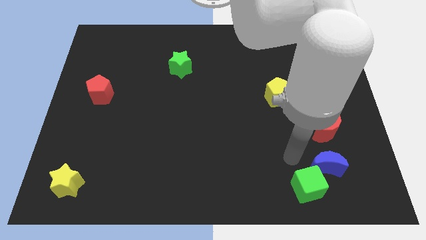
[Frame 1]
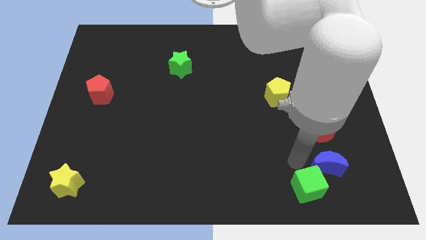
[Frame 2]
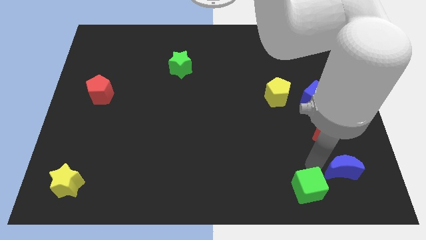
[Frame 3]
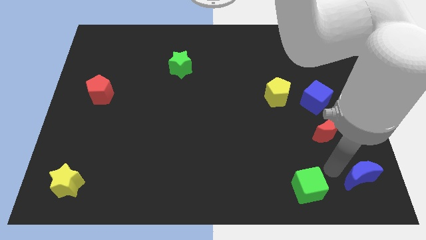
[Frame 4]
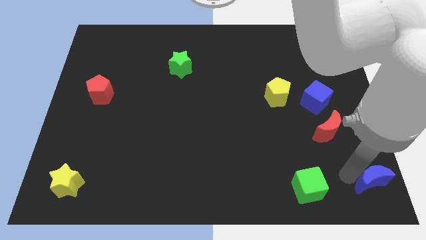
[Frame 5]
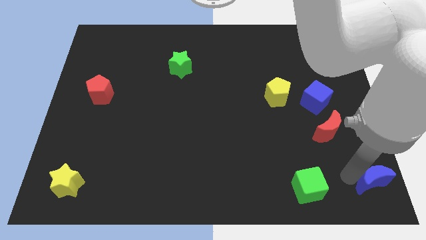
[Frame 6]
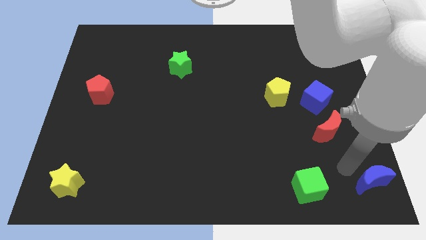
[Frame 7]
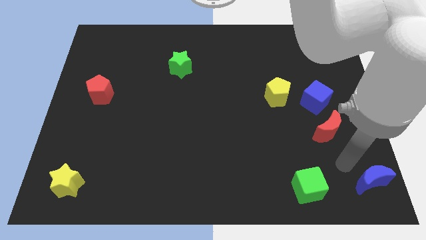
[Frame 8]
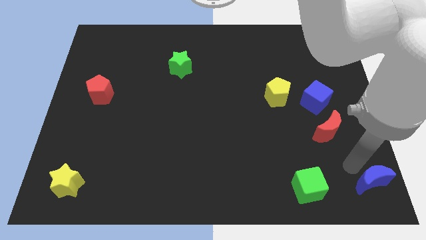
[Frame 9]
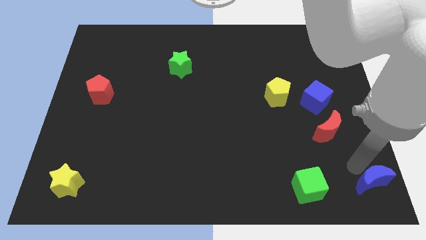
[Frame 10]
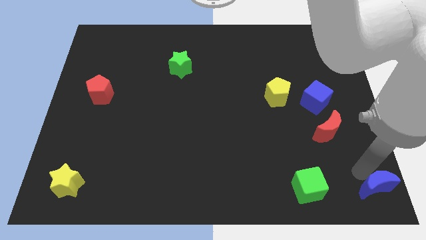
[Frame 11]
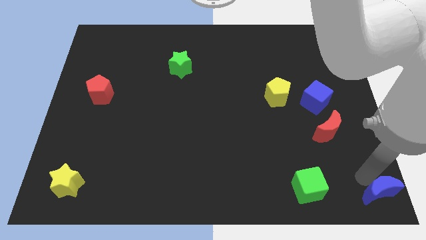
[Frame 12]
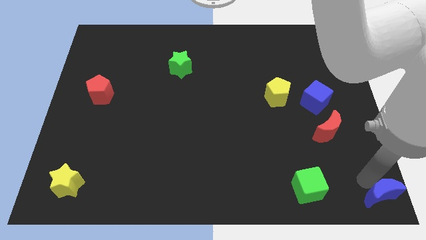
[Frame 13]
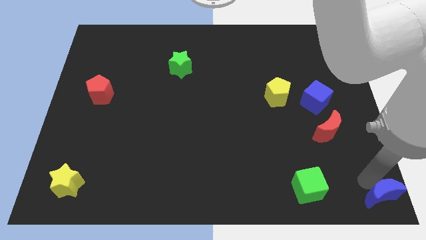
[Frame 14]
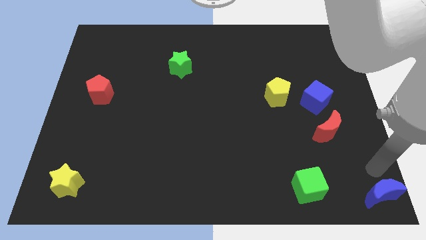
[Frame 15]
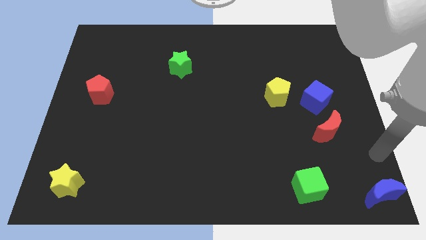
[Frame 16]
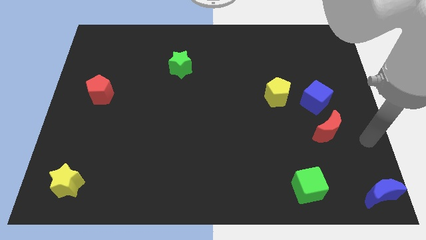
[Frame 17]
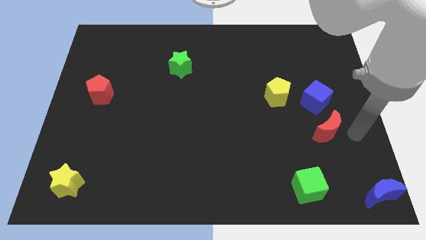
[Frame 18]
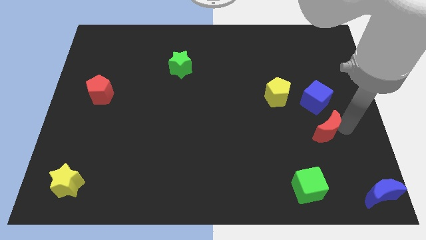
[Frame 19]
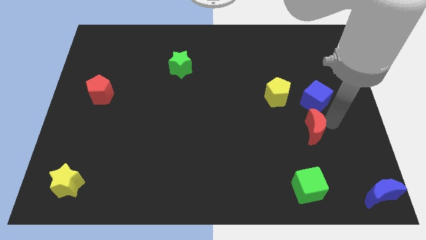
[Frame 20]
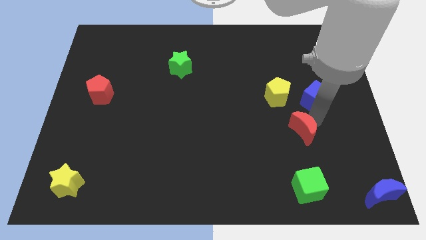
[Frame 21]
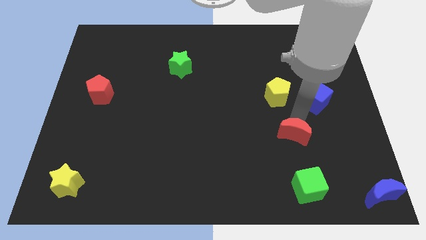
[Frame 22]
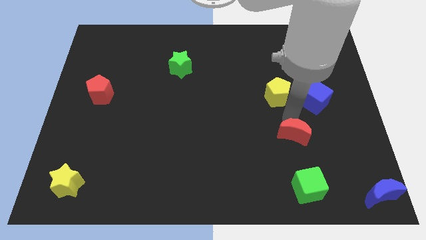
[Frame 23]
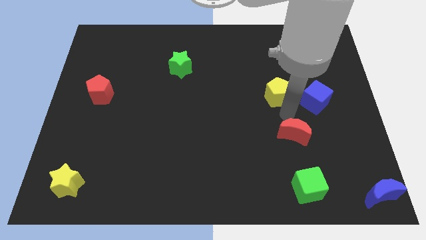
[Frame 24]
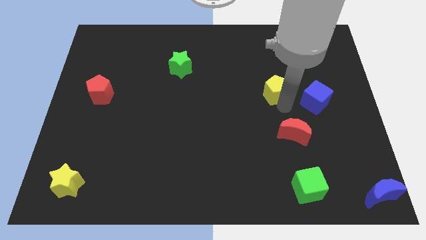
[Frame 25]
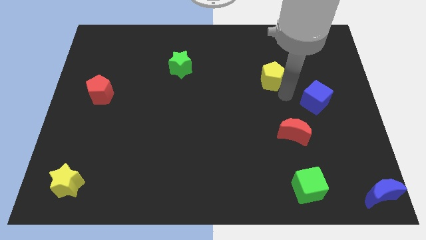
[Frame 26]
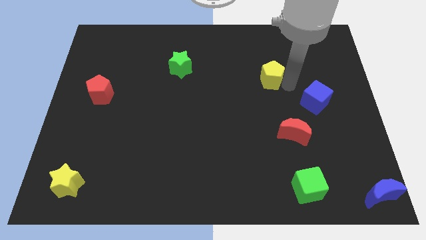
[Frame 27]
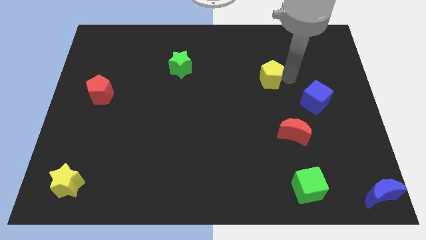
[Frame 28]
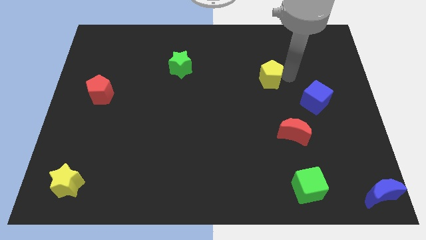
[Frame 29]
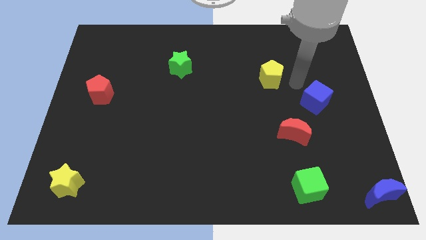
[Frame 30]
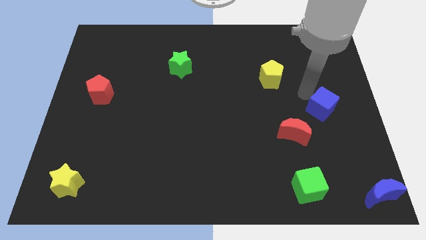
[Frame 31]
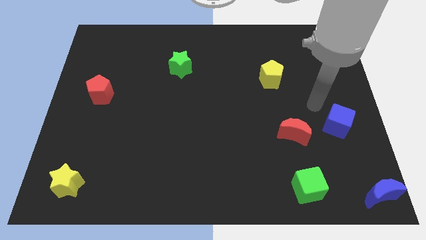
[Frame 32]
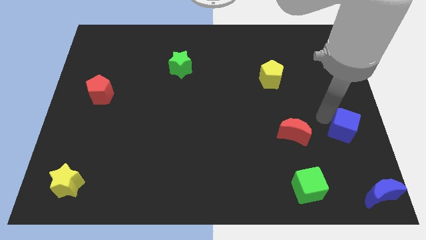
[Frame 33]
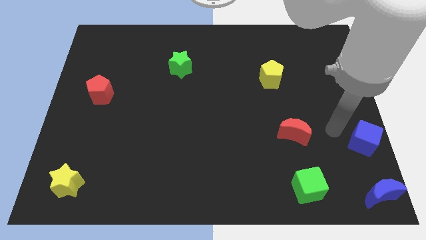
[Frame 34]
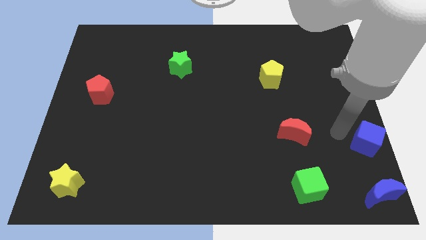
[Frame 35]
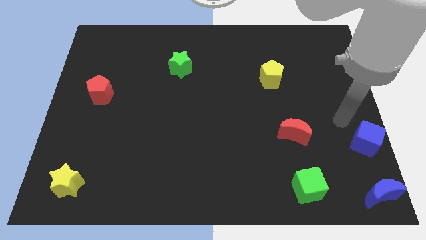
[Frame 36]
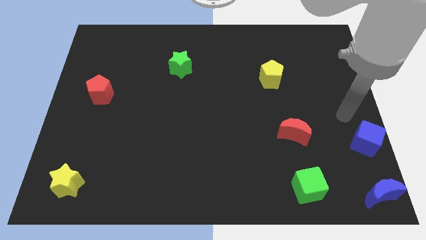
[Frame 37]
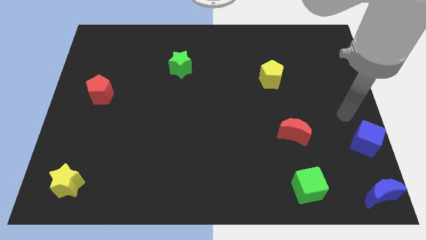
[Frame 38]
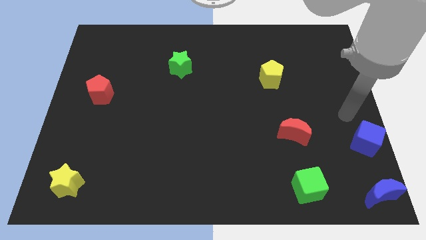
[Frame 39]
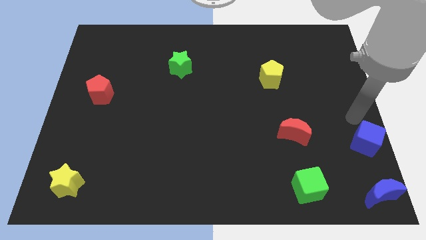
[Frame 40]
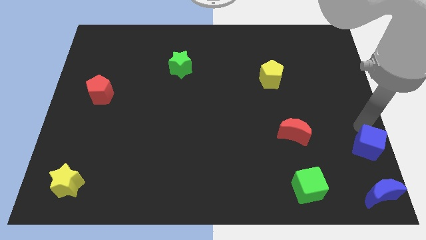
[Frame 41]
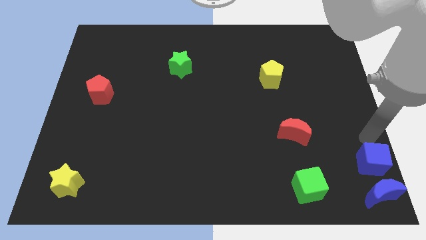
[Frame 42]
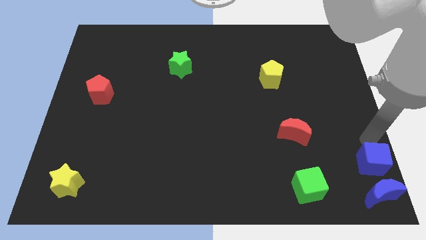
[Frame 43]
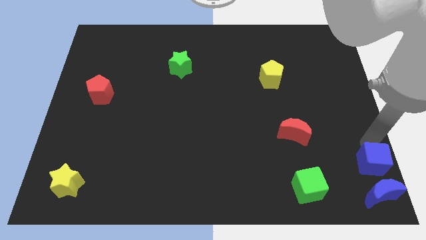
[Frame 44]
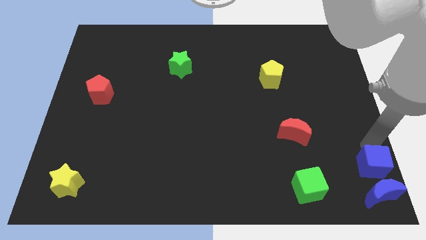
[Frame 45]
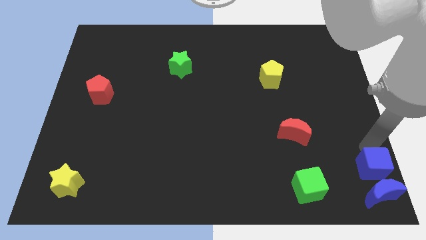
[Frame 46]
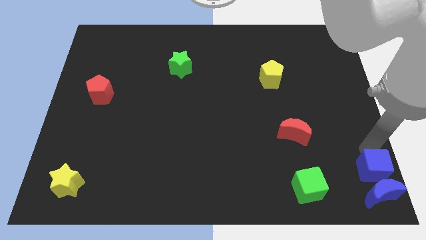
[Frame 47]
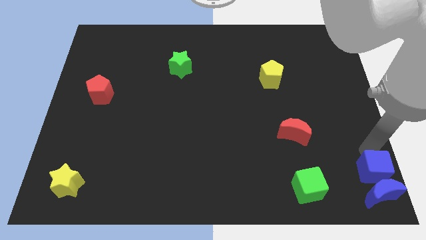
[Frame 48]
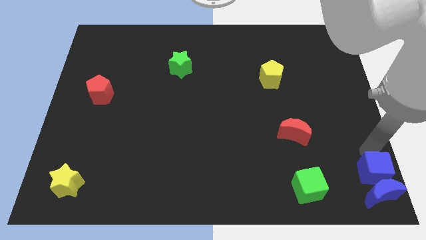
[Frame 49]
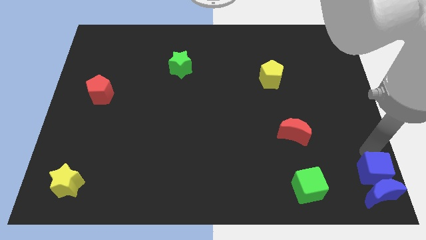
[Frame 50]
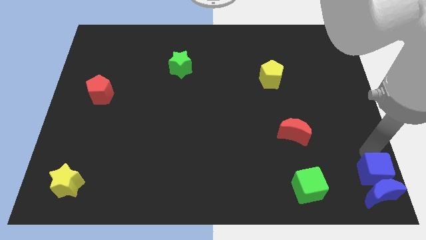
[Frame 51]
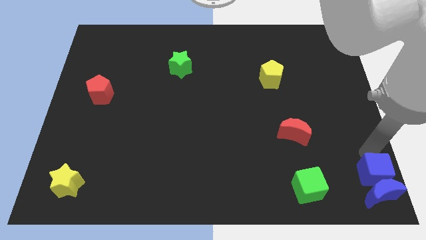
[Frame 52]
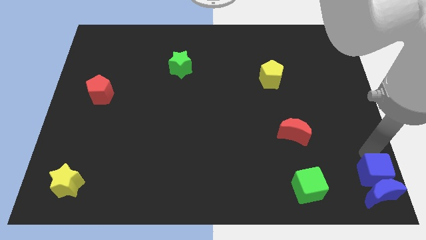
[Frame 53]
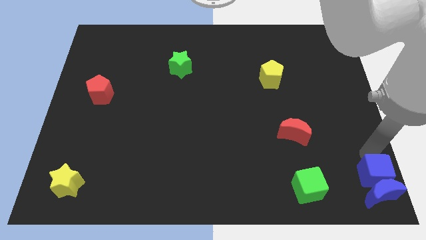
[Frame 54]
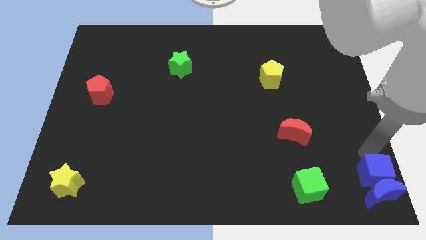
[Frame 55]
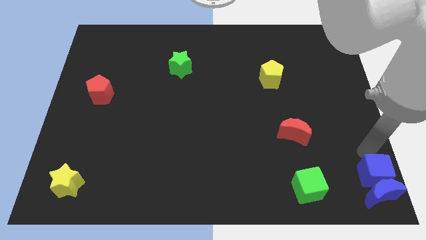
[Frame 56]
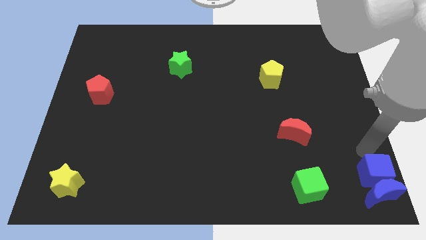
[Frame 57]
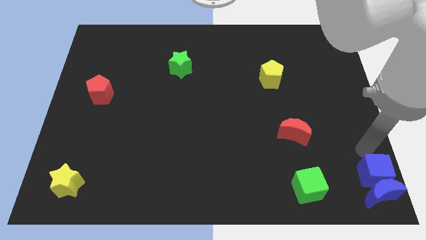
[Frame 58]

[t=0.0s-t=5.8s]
move the blue cube into the blue crescent

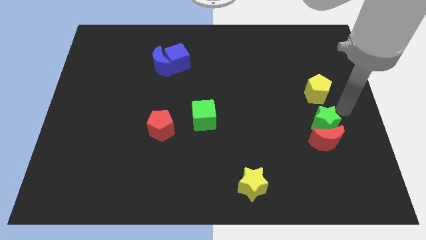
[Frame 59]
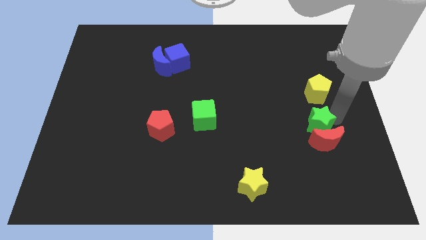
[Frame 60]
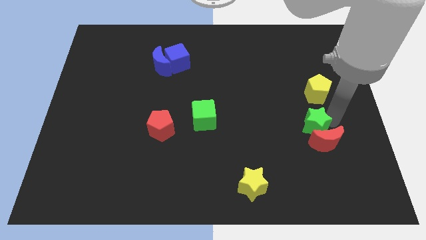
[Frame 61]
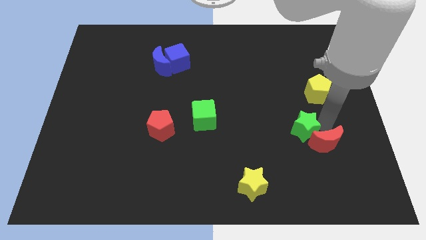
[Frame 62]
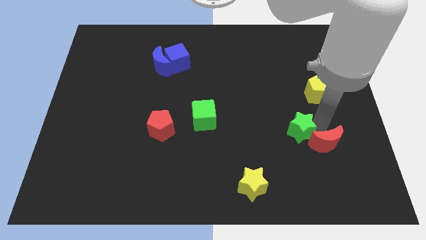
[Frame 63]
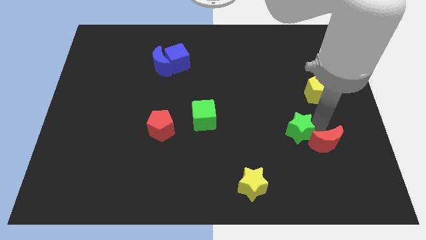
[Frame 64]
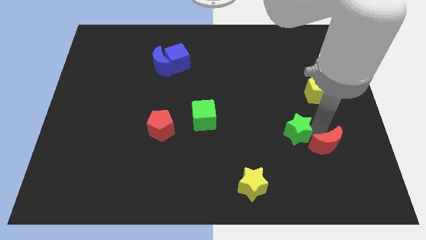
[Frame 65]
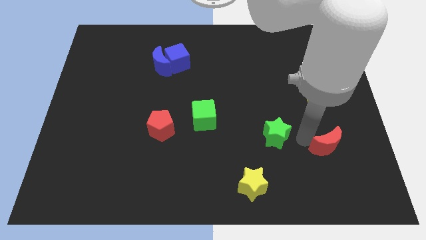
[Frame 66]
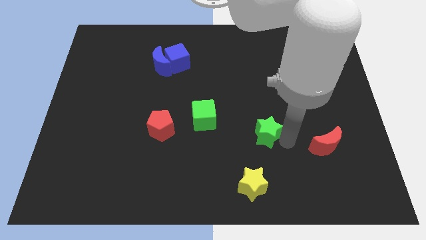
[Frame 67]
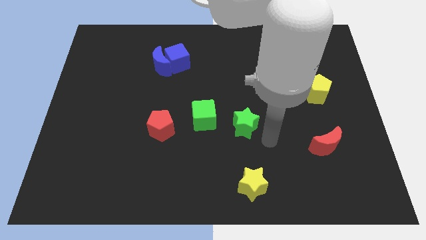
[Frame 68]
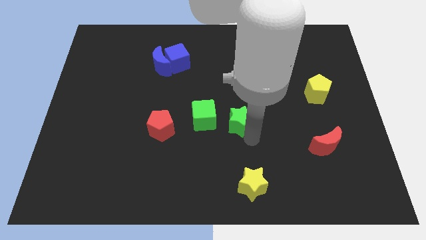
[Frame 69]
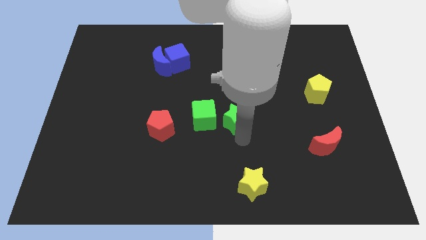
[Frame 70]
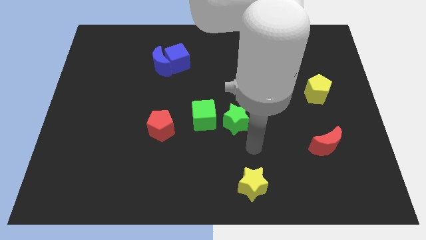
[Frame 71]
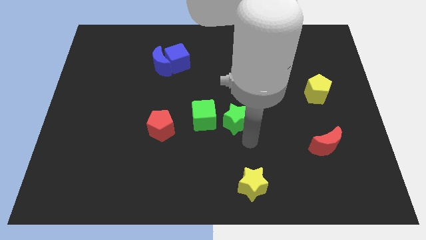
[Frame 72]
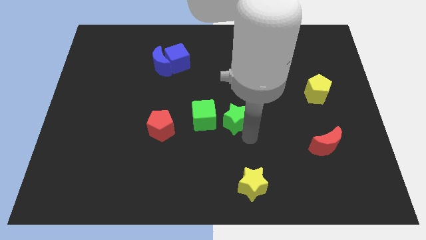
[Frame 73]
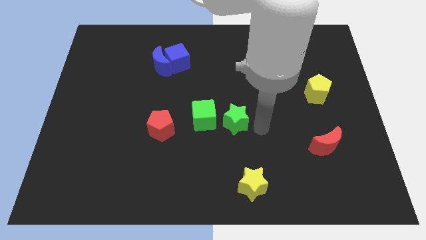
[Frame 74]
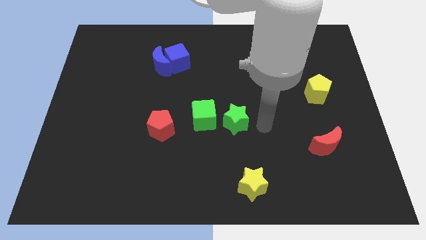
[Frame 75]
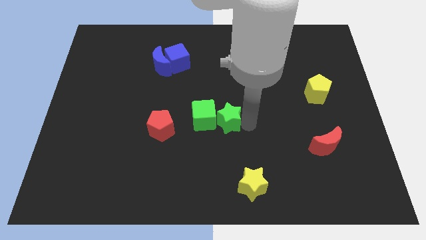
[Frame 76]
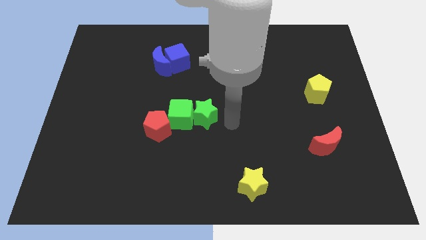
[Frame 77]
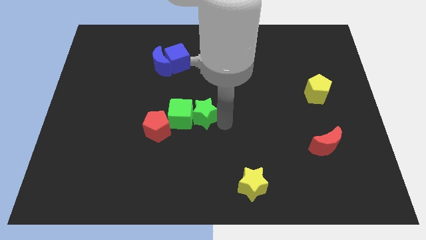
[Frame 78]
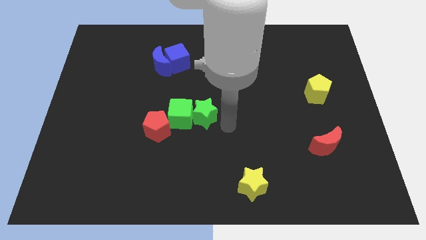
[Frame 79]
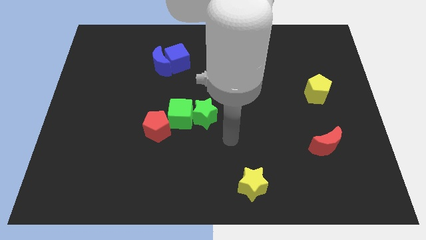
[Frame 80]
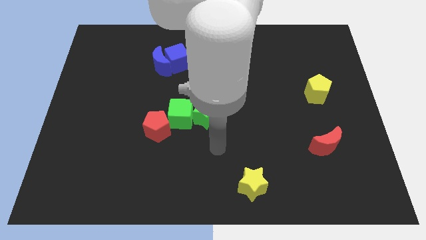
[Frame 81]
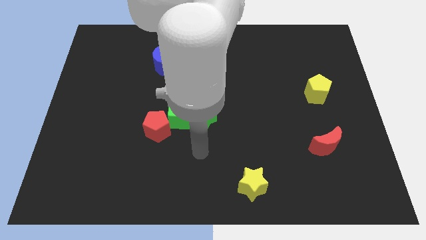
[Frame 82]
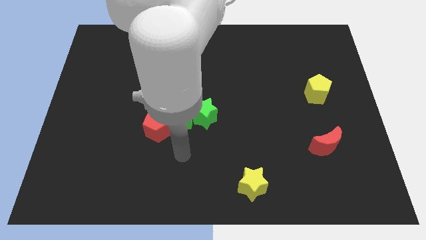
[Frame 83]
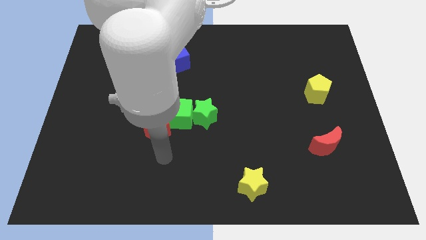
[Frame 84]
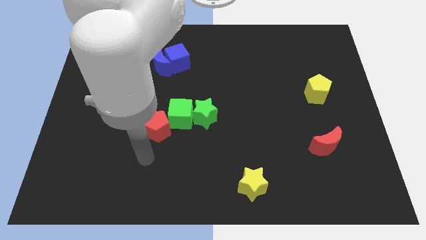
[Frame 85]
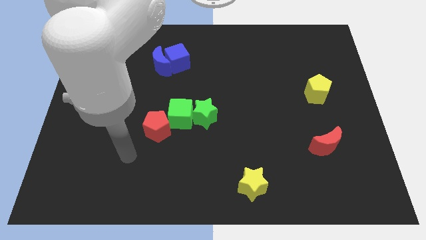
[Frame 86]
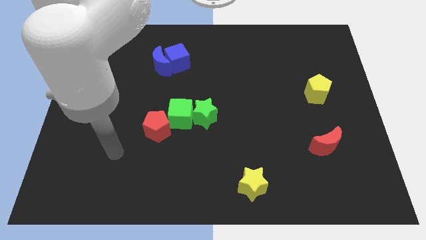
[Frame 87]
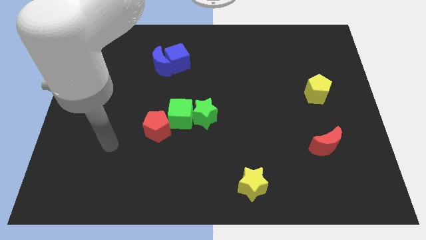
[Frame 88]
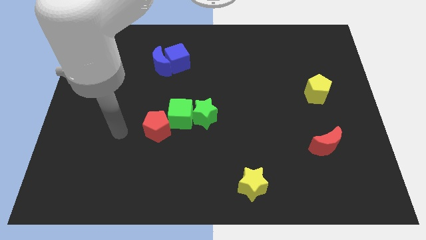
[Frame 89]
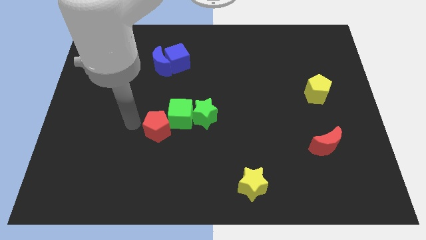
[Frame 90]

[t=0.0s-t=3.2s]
push the green blocks and red pentagon towards the left side of the board
